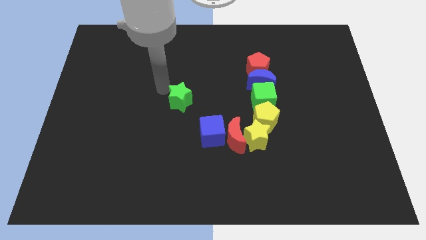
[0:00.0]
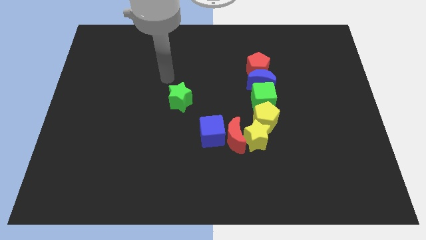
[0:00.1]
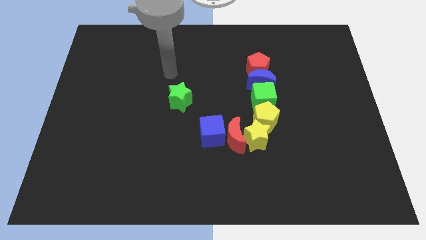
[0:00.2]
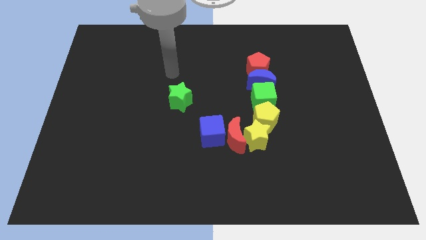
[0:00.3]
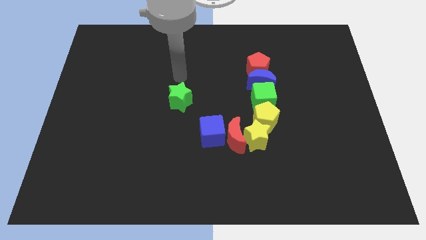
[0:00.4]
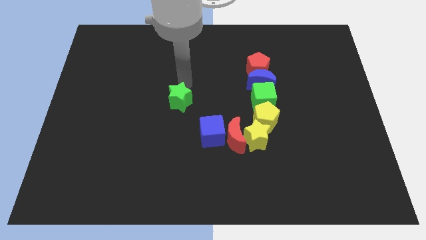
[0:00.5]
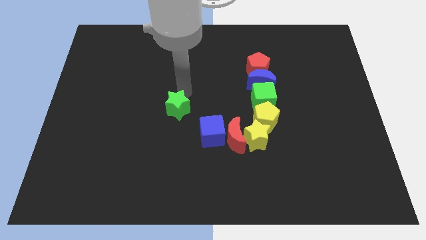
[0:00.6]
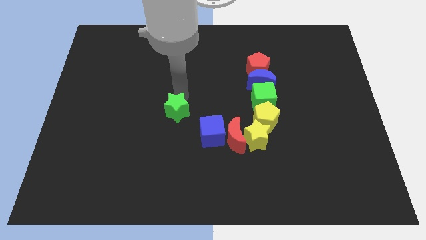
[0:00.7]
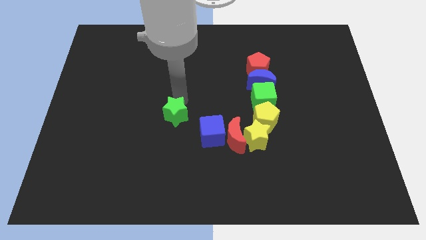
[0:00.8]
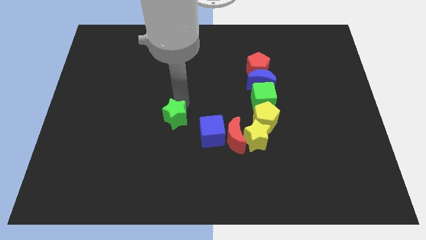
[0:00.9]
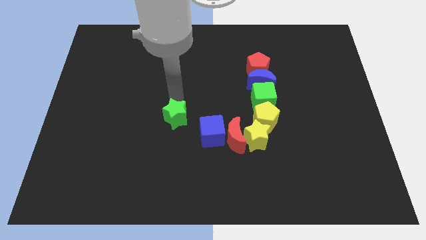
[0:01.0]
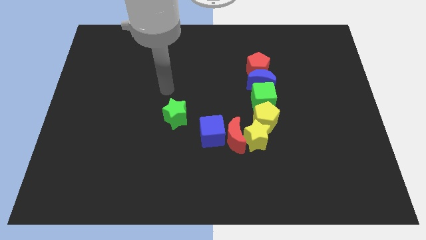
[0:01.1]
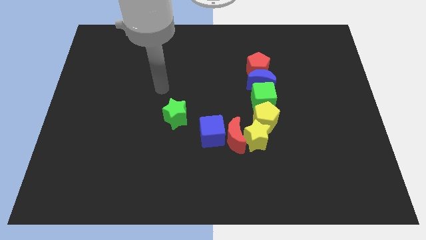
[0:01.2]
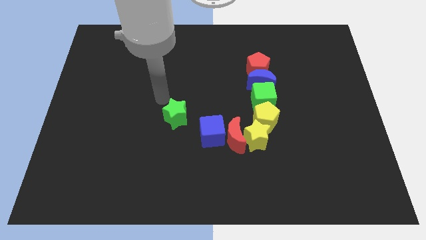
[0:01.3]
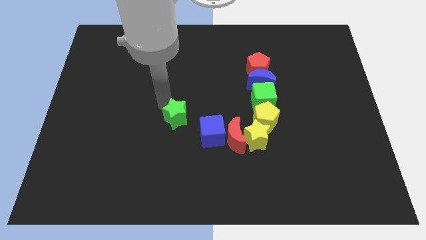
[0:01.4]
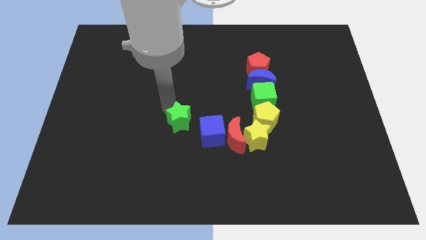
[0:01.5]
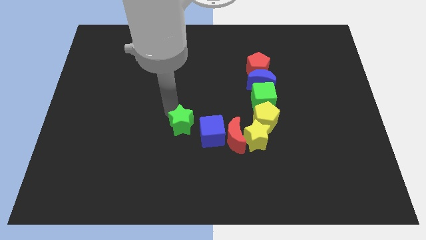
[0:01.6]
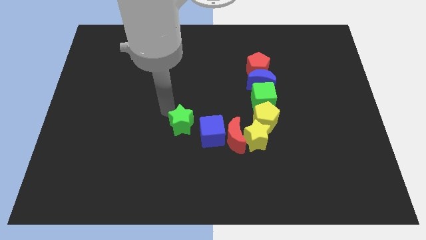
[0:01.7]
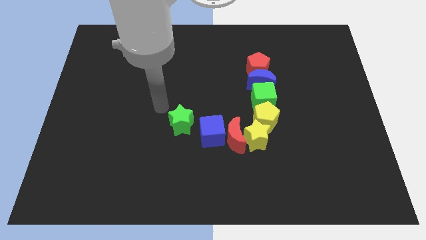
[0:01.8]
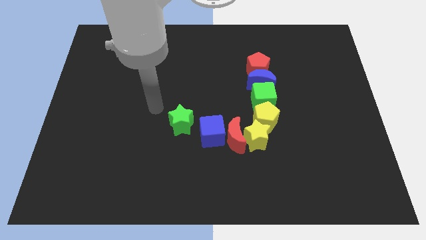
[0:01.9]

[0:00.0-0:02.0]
move the green star to the top left side of the blue cube

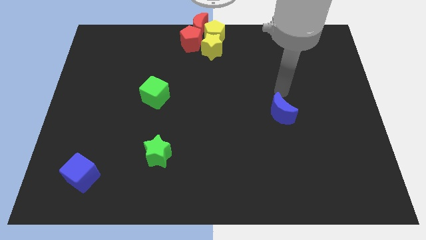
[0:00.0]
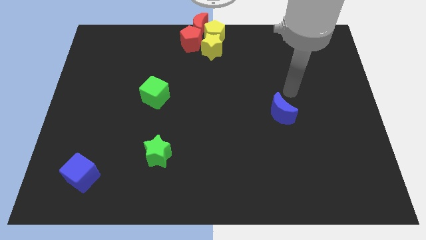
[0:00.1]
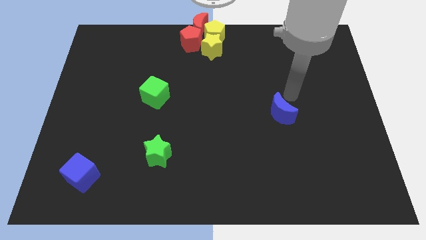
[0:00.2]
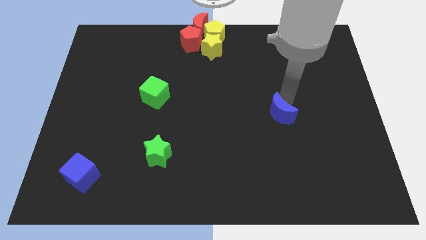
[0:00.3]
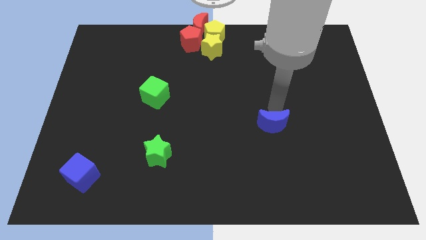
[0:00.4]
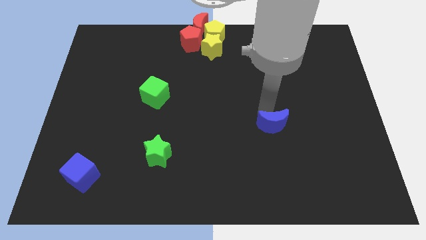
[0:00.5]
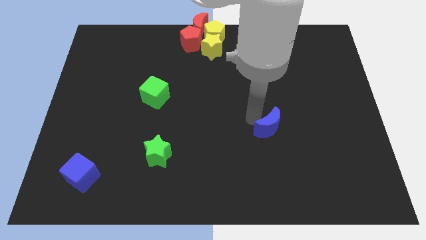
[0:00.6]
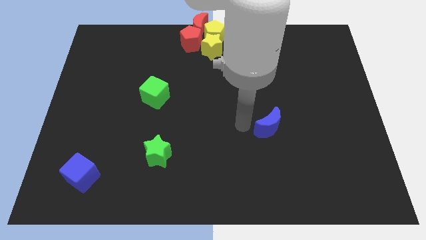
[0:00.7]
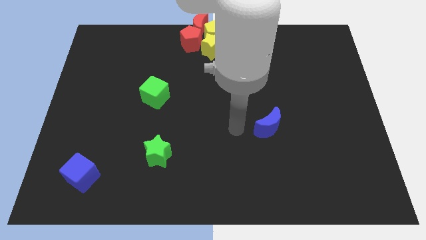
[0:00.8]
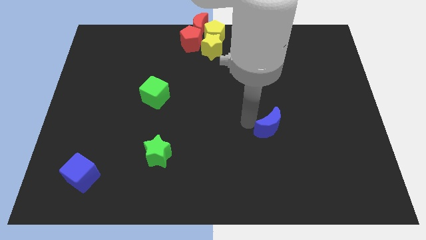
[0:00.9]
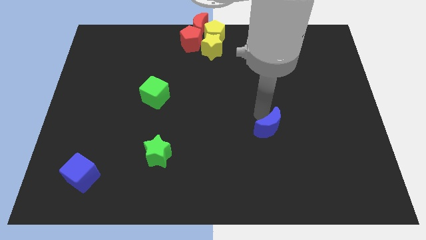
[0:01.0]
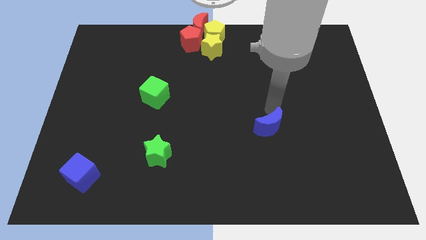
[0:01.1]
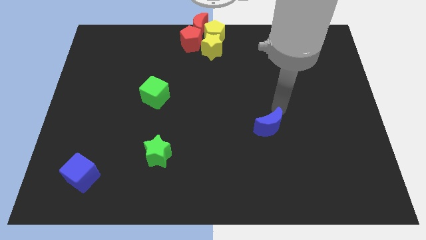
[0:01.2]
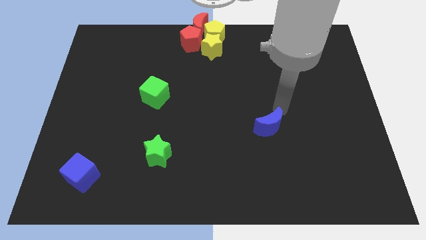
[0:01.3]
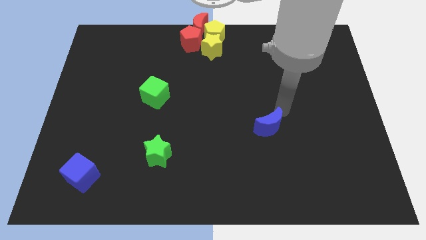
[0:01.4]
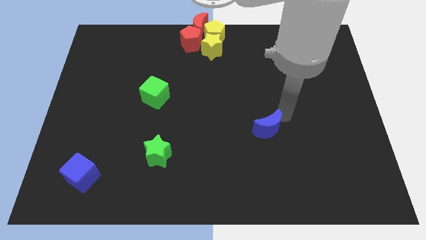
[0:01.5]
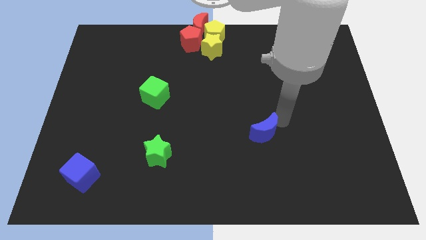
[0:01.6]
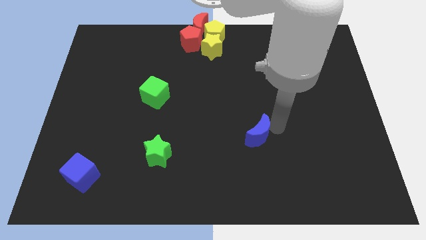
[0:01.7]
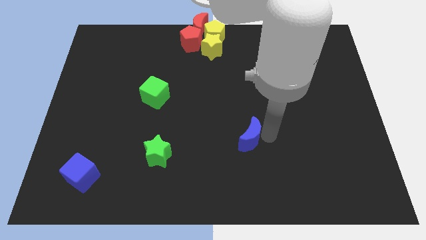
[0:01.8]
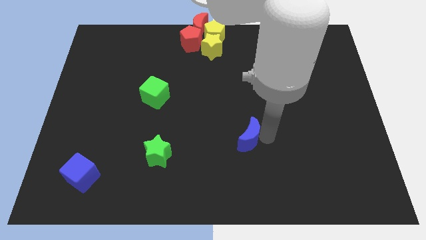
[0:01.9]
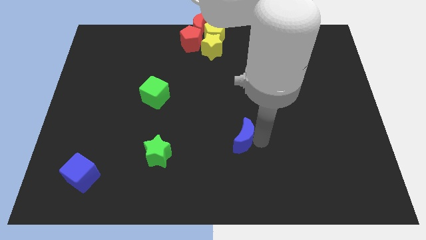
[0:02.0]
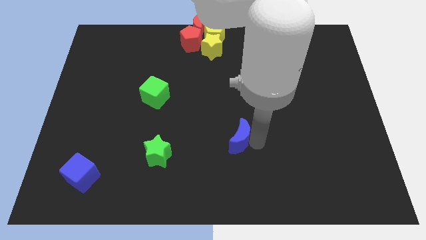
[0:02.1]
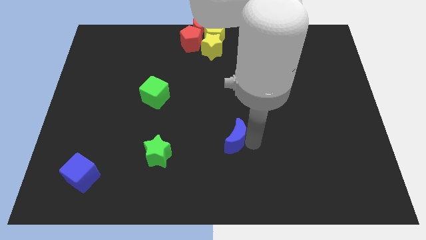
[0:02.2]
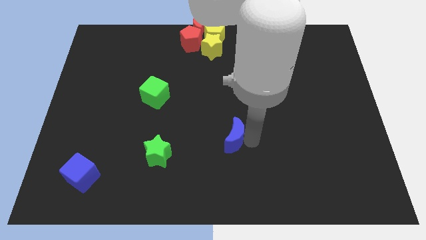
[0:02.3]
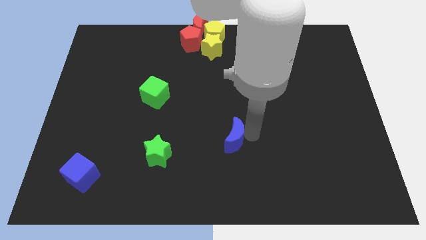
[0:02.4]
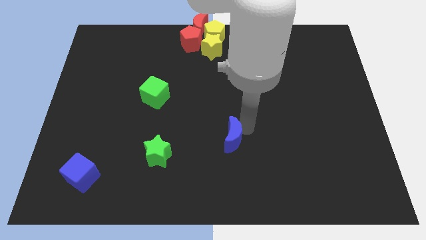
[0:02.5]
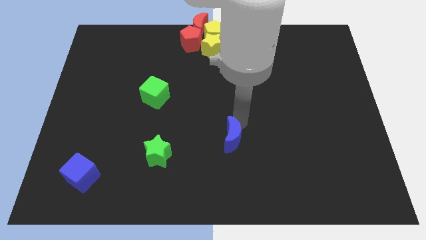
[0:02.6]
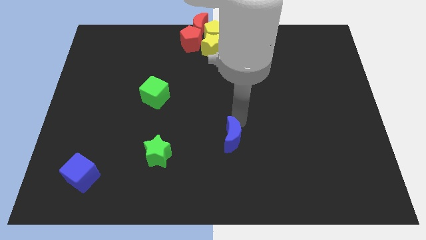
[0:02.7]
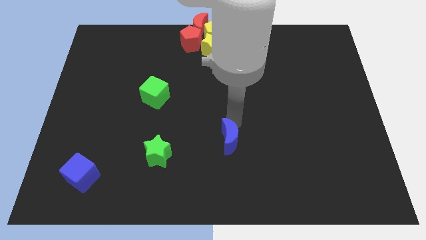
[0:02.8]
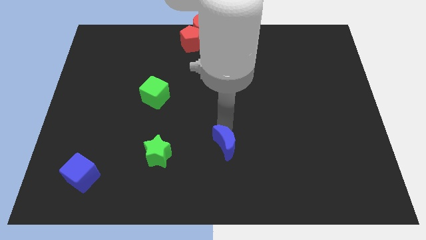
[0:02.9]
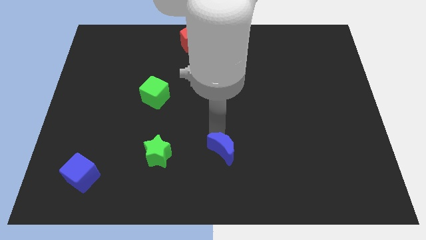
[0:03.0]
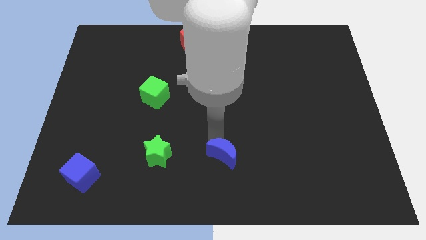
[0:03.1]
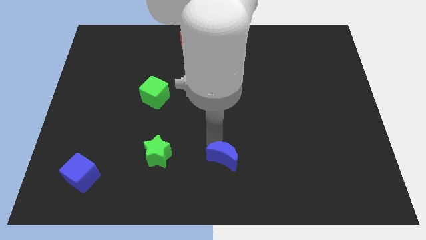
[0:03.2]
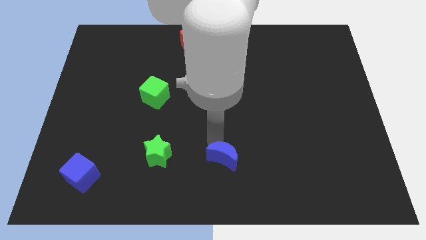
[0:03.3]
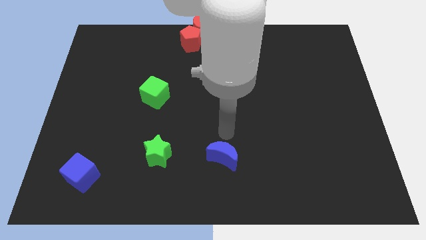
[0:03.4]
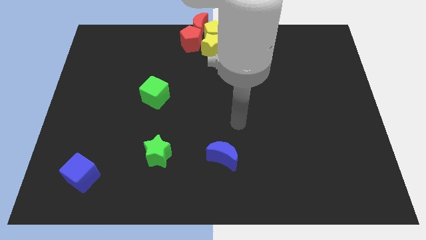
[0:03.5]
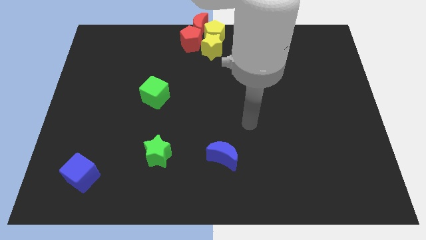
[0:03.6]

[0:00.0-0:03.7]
place the blue moon right to the green star

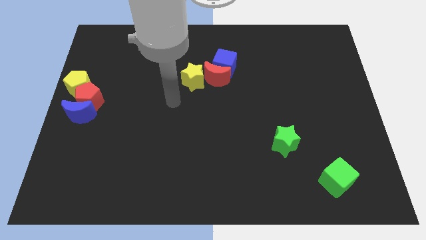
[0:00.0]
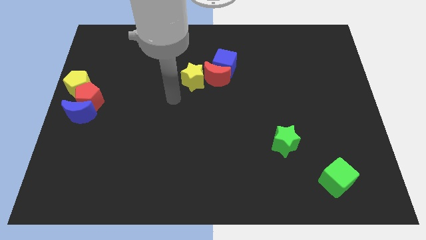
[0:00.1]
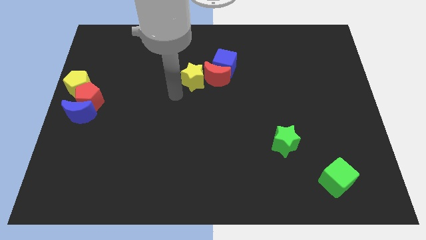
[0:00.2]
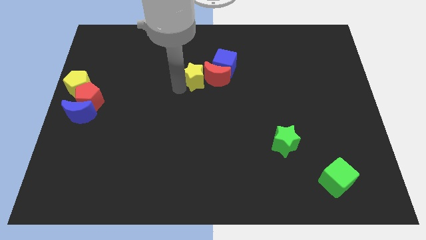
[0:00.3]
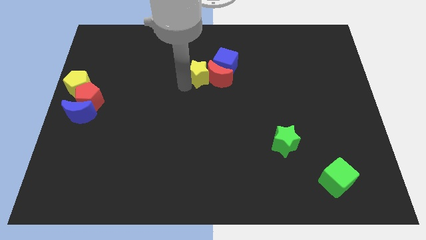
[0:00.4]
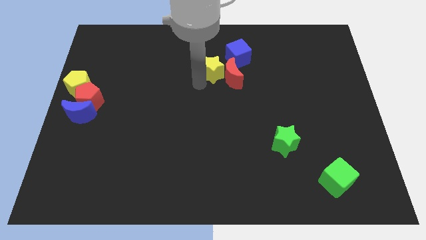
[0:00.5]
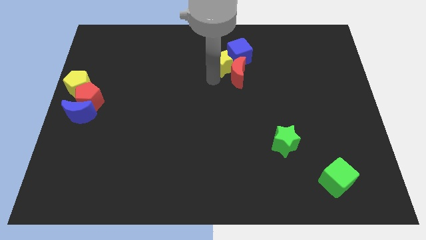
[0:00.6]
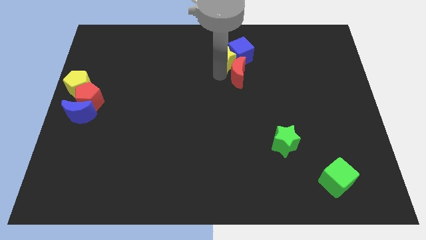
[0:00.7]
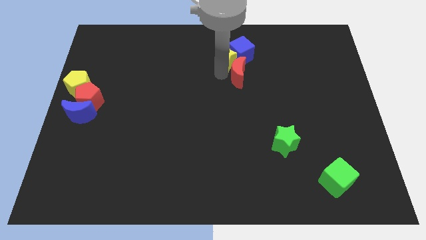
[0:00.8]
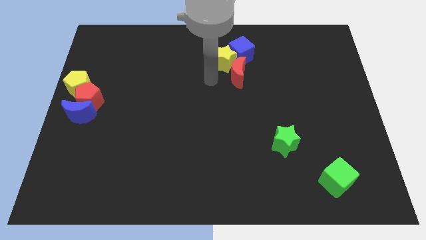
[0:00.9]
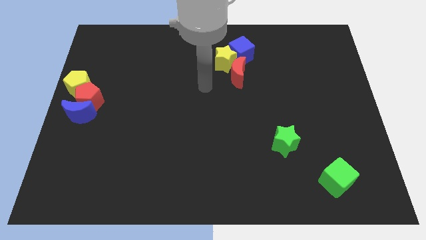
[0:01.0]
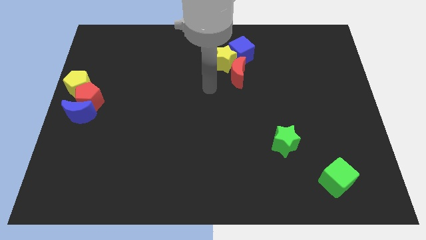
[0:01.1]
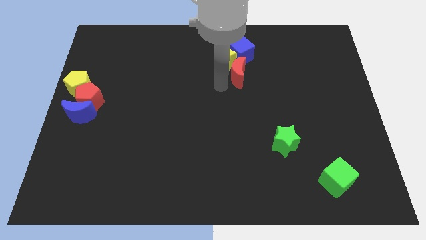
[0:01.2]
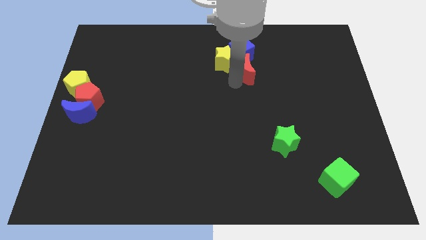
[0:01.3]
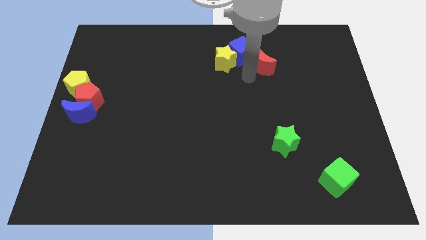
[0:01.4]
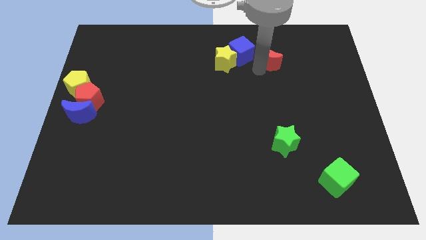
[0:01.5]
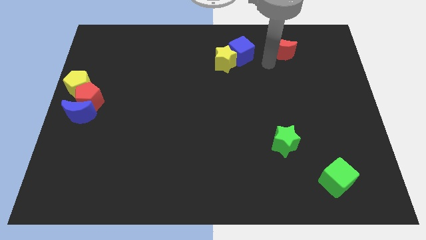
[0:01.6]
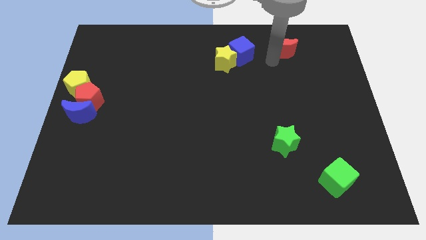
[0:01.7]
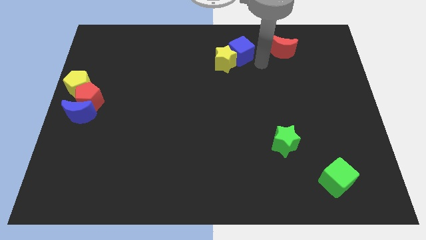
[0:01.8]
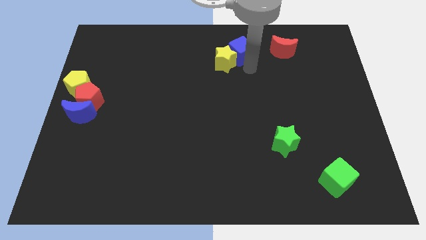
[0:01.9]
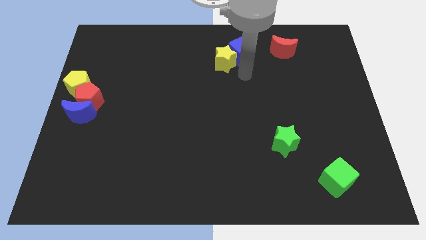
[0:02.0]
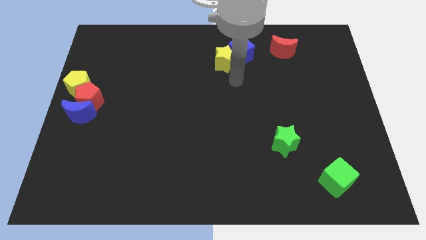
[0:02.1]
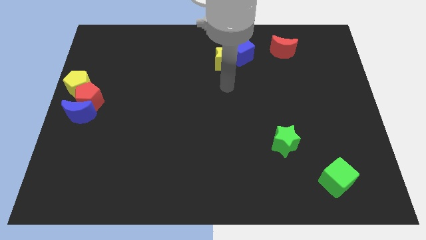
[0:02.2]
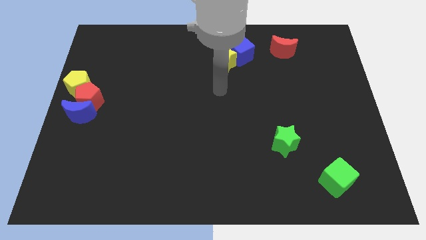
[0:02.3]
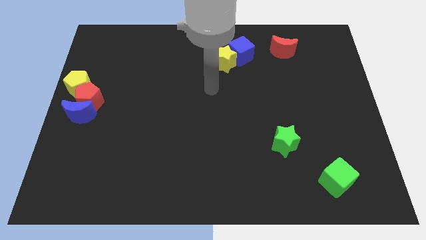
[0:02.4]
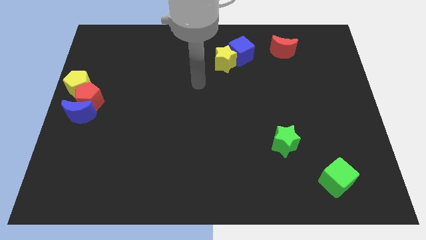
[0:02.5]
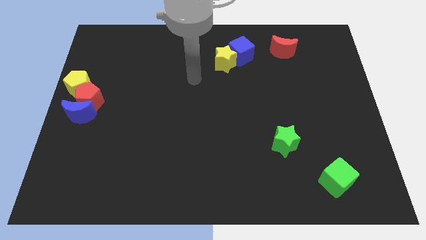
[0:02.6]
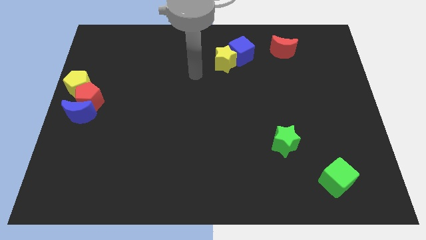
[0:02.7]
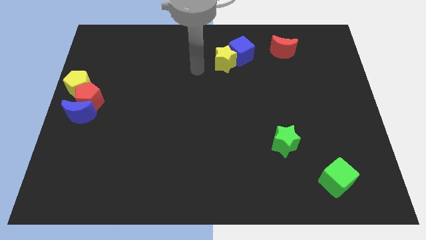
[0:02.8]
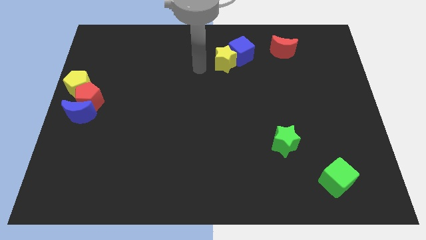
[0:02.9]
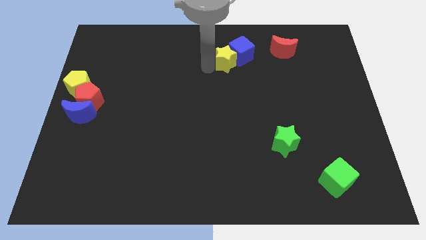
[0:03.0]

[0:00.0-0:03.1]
slide the red moon towards the top right

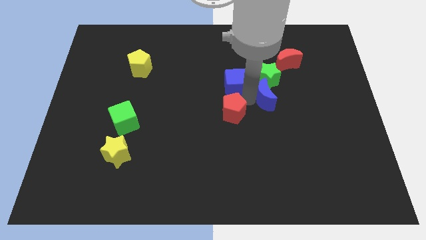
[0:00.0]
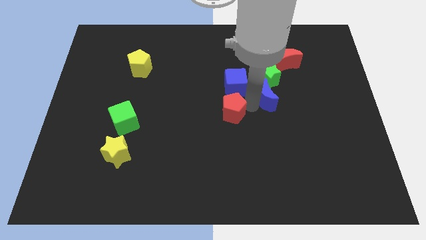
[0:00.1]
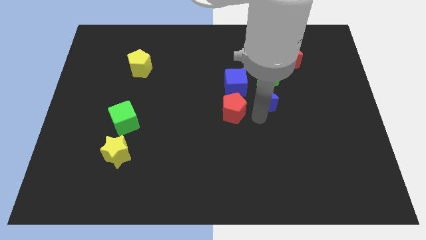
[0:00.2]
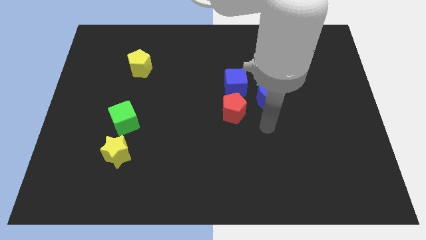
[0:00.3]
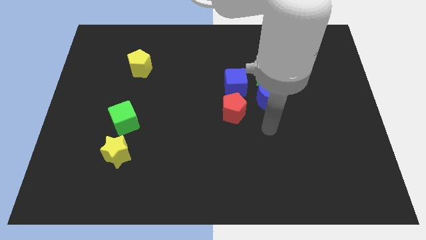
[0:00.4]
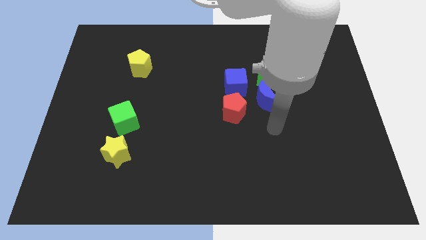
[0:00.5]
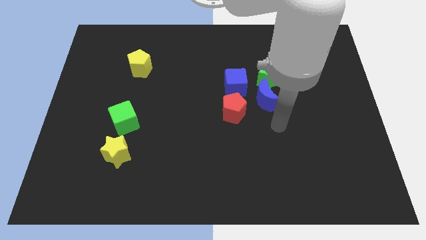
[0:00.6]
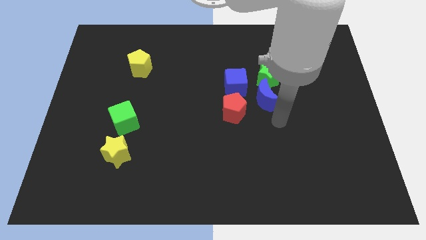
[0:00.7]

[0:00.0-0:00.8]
move your arm away from the middle of red pentagon and blue moon
